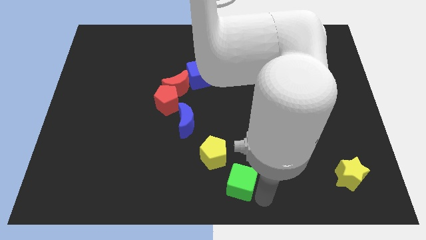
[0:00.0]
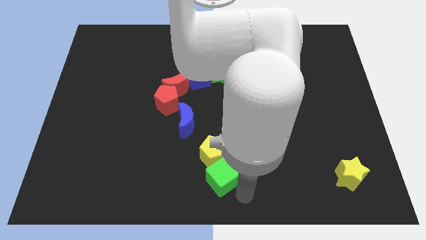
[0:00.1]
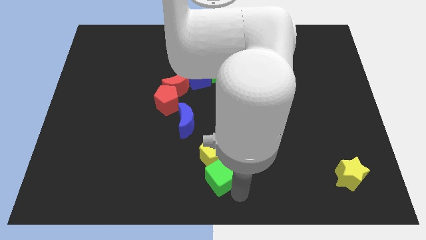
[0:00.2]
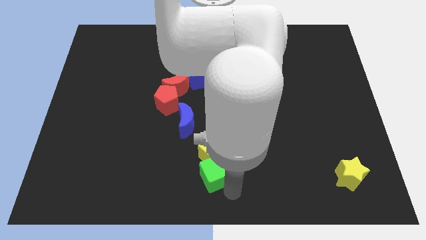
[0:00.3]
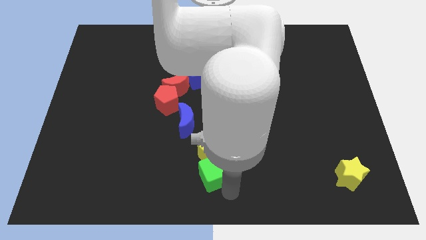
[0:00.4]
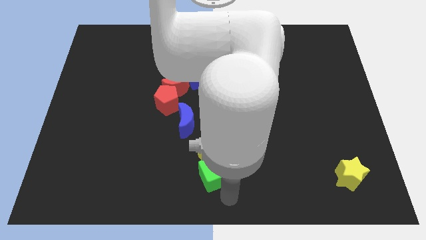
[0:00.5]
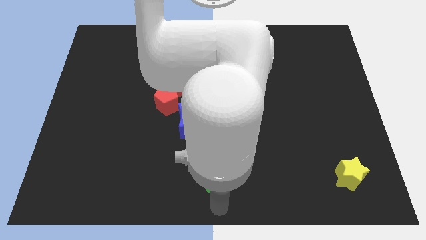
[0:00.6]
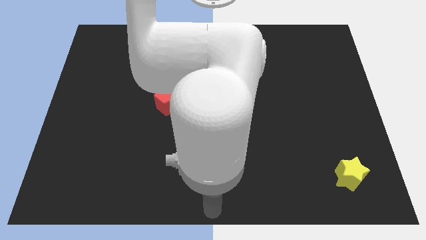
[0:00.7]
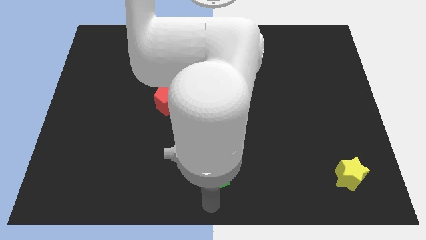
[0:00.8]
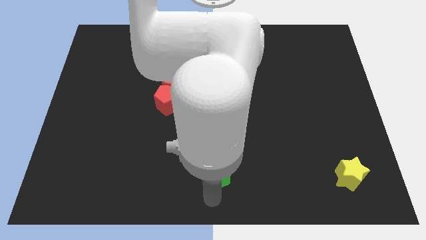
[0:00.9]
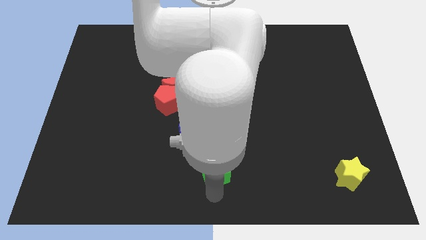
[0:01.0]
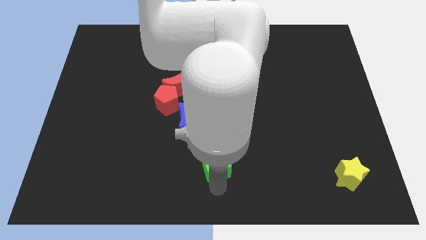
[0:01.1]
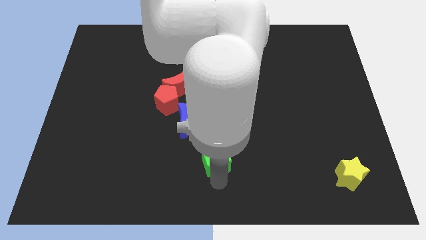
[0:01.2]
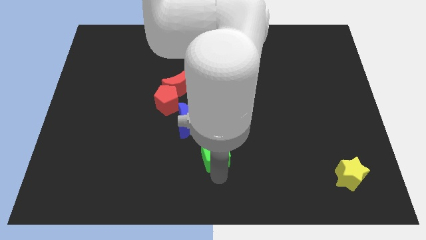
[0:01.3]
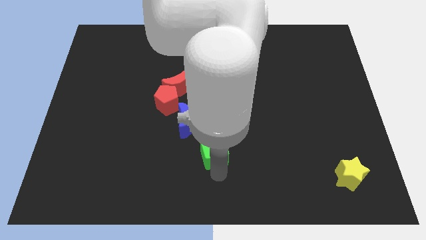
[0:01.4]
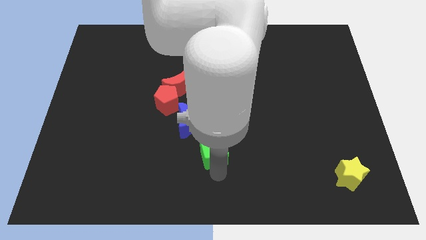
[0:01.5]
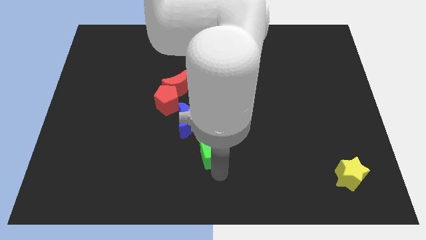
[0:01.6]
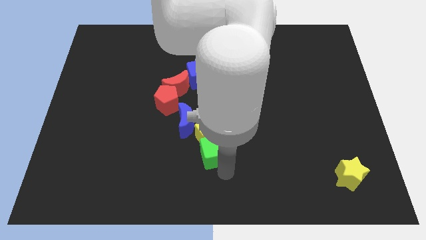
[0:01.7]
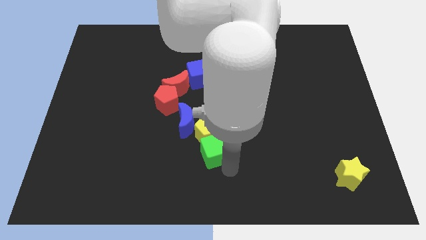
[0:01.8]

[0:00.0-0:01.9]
push the green cube and yellow pentagon into the blue crescent

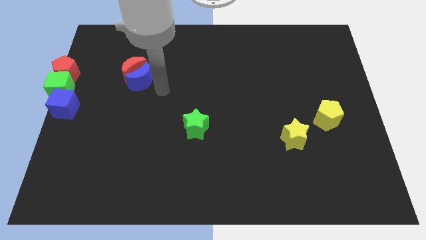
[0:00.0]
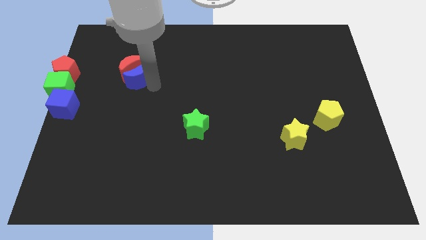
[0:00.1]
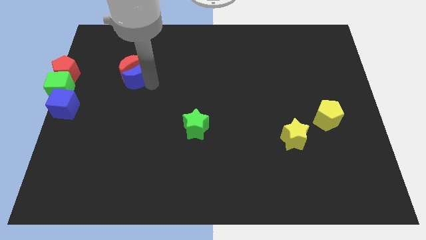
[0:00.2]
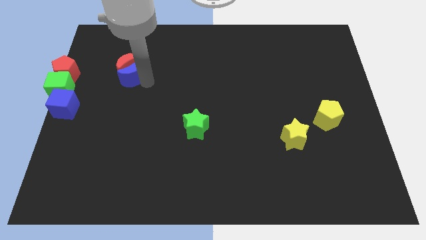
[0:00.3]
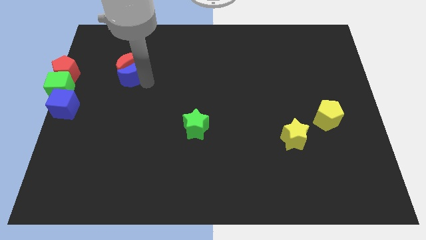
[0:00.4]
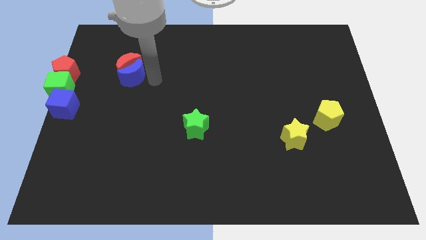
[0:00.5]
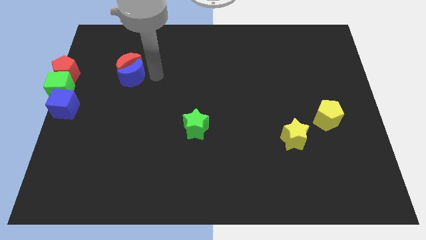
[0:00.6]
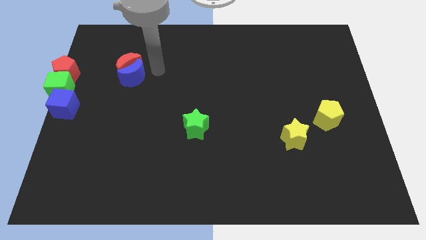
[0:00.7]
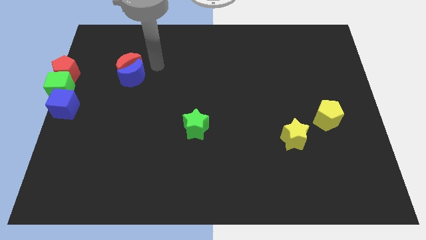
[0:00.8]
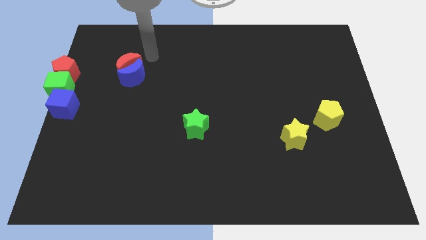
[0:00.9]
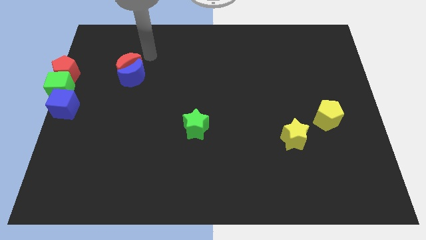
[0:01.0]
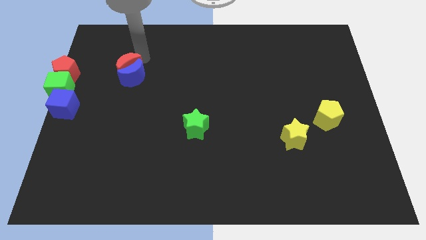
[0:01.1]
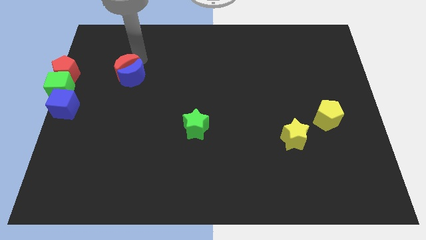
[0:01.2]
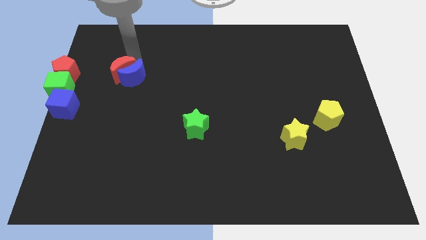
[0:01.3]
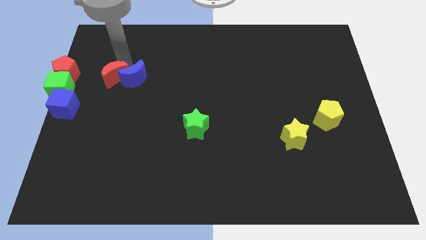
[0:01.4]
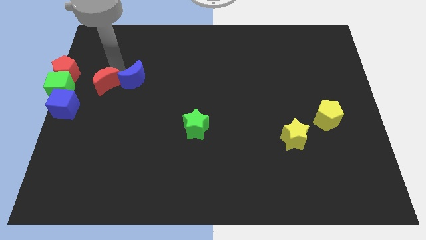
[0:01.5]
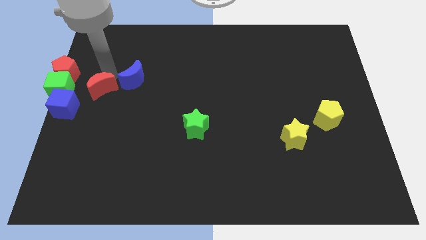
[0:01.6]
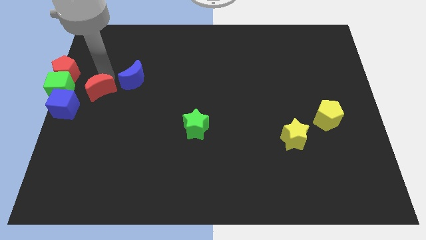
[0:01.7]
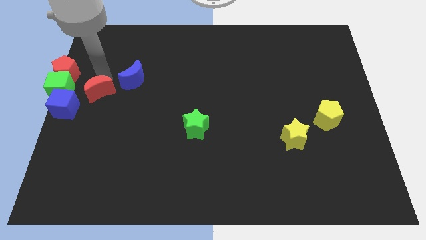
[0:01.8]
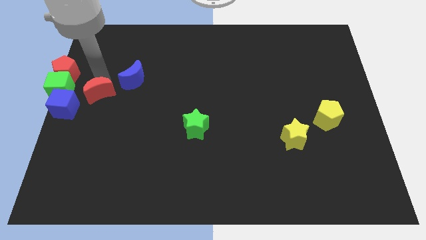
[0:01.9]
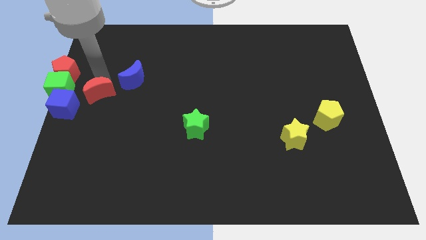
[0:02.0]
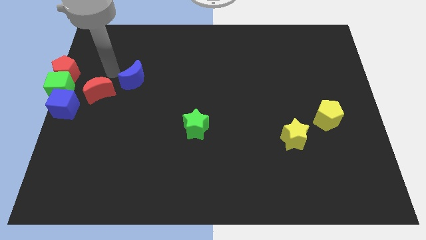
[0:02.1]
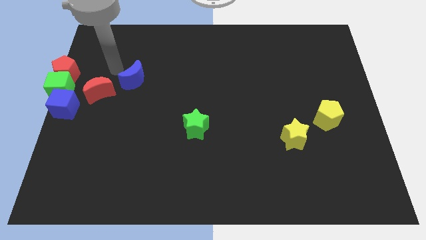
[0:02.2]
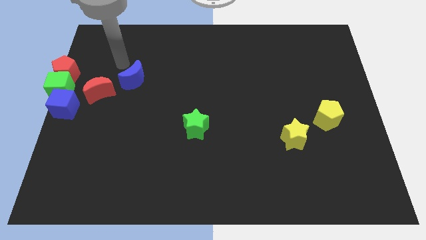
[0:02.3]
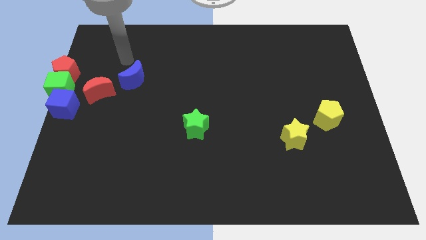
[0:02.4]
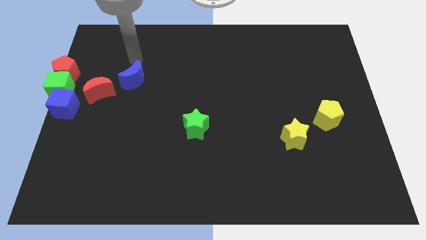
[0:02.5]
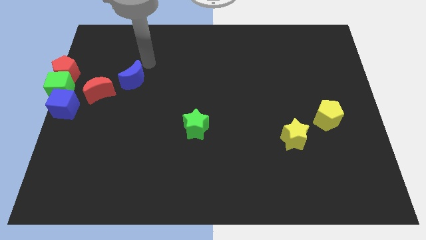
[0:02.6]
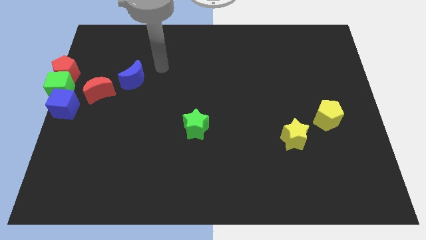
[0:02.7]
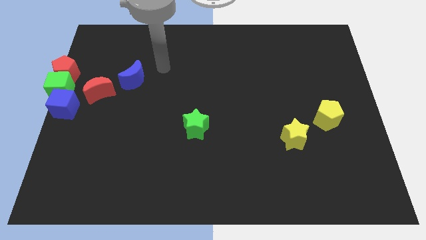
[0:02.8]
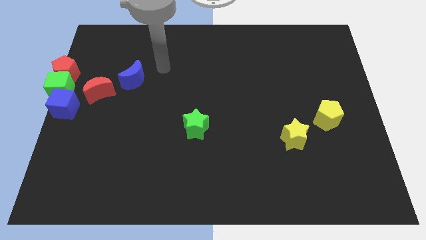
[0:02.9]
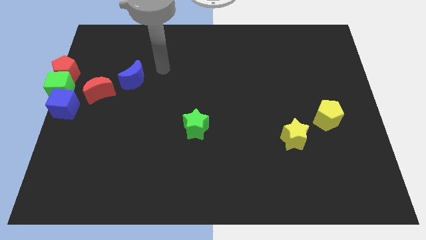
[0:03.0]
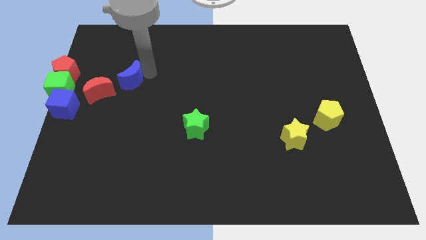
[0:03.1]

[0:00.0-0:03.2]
move the red crescent to the left center of the board

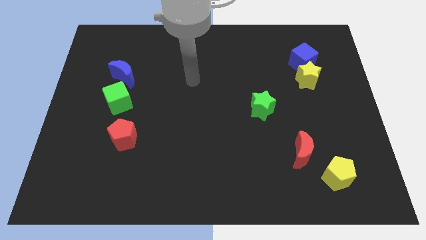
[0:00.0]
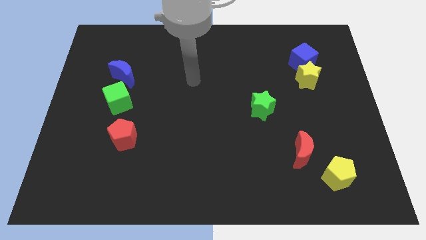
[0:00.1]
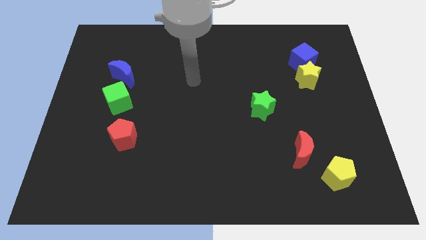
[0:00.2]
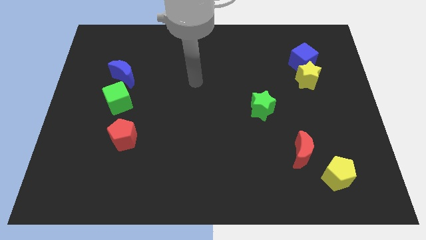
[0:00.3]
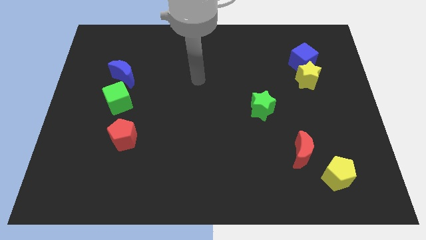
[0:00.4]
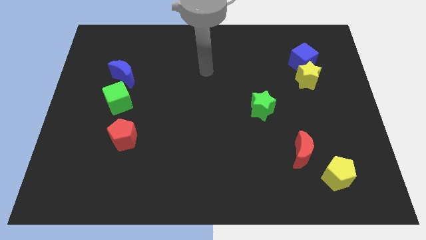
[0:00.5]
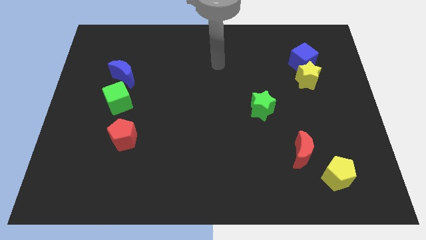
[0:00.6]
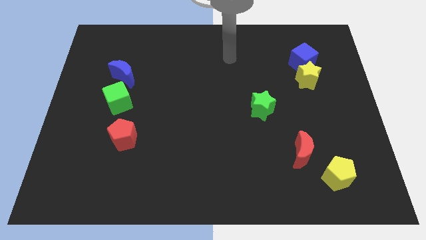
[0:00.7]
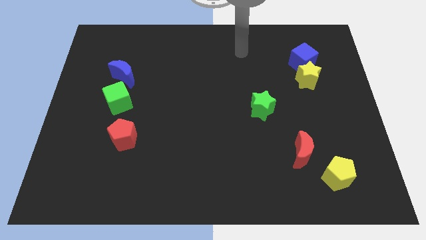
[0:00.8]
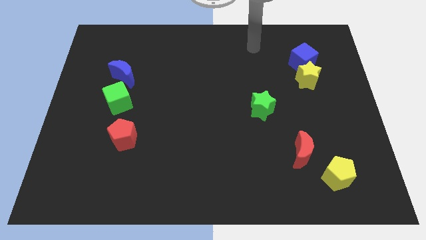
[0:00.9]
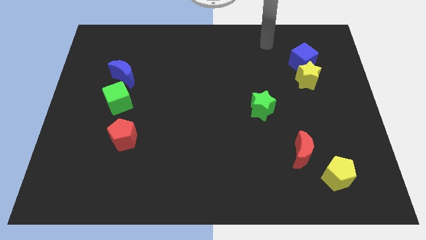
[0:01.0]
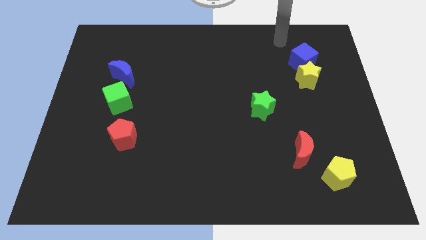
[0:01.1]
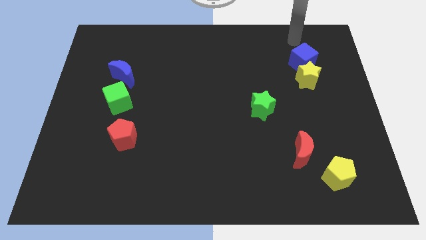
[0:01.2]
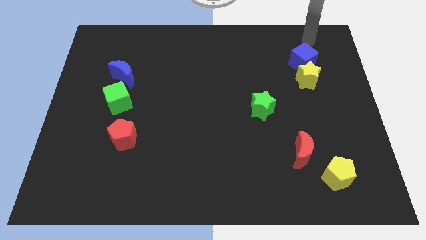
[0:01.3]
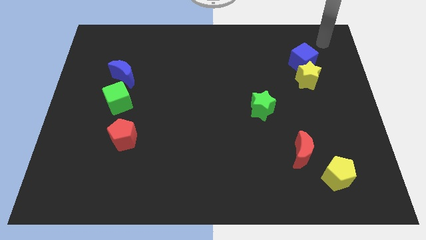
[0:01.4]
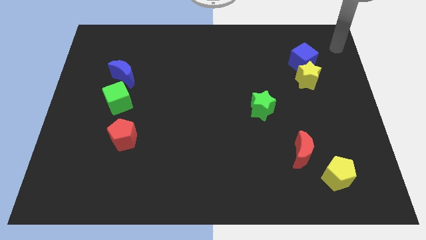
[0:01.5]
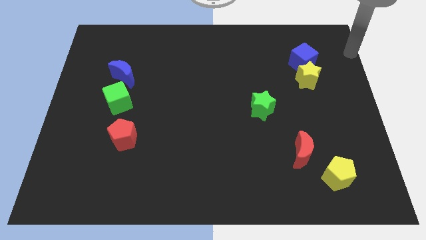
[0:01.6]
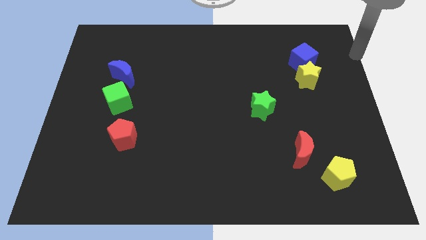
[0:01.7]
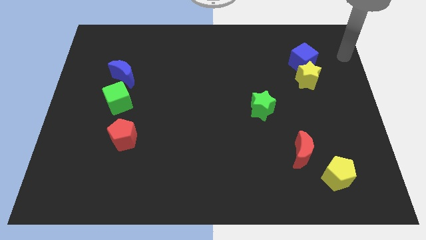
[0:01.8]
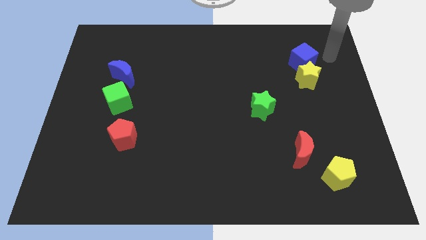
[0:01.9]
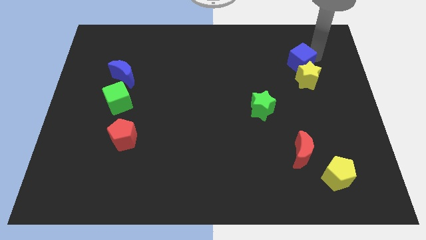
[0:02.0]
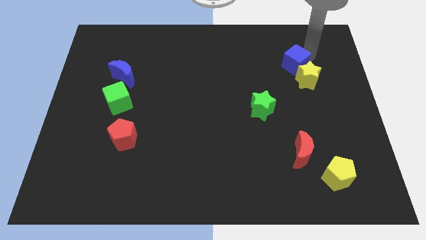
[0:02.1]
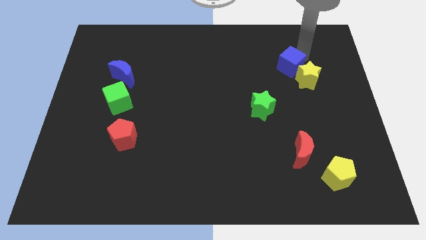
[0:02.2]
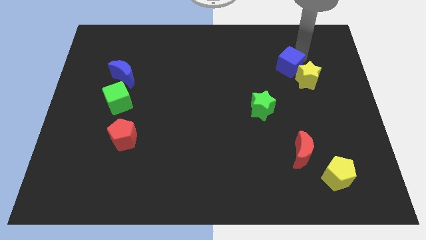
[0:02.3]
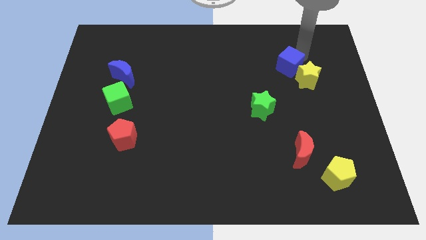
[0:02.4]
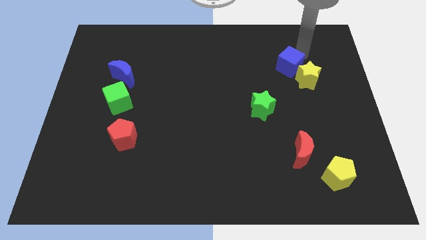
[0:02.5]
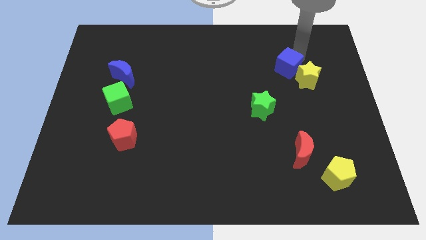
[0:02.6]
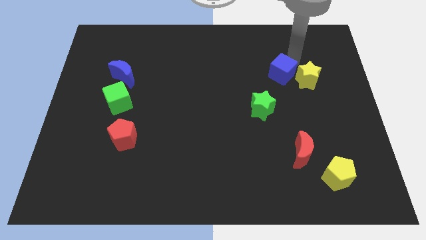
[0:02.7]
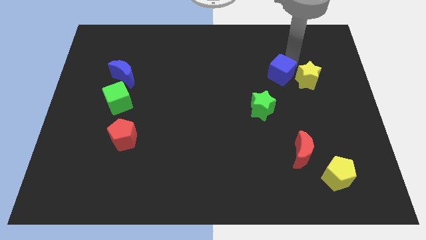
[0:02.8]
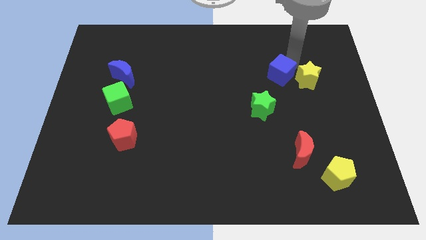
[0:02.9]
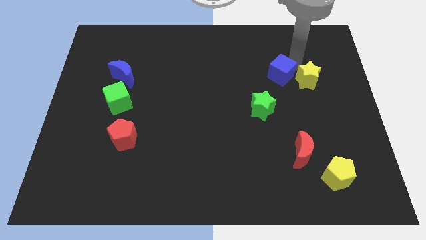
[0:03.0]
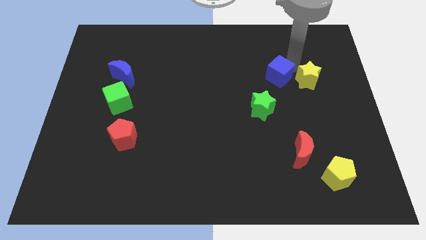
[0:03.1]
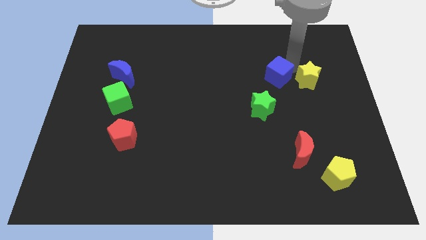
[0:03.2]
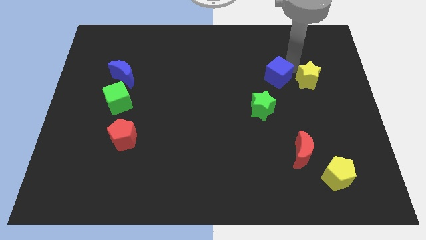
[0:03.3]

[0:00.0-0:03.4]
place blue cube to the left of yellow star

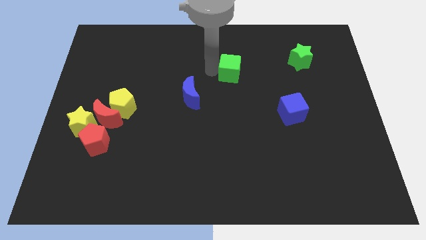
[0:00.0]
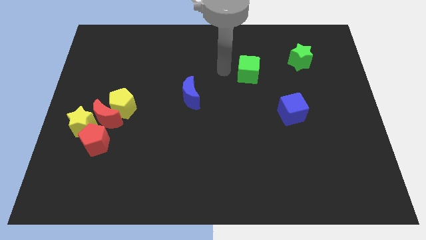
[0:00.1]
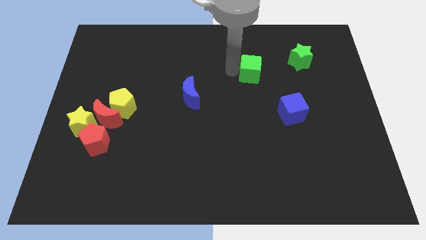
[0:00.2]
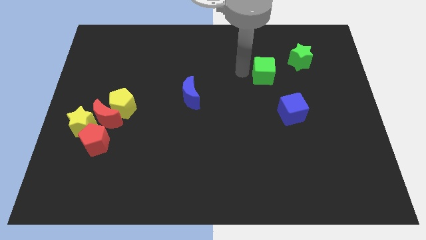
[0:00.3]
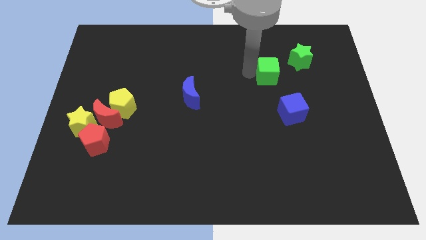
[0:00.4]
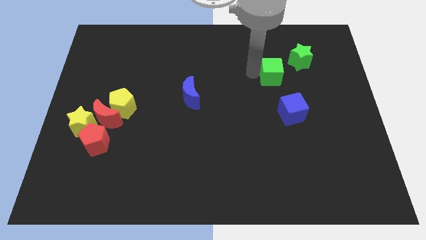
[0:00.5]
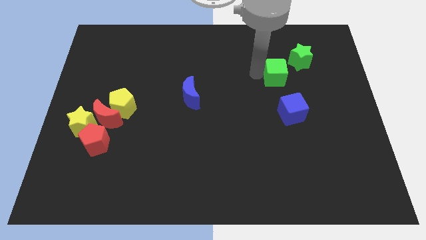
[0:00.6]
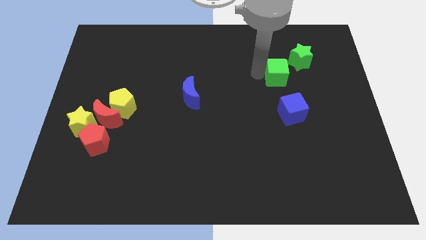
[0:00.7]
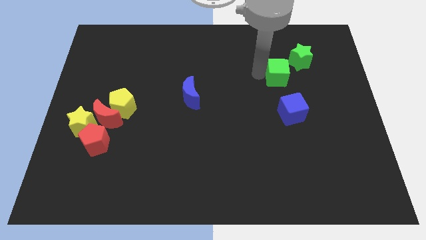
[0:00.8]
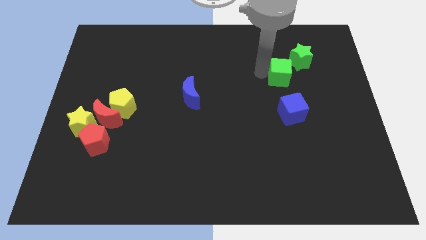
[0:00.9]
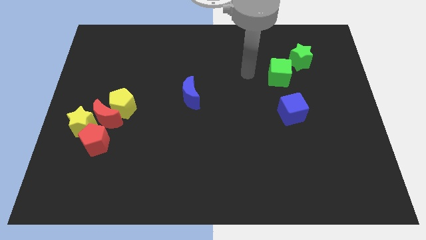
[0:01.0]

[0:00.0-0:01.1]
slide the green cube to the bottom left side of the green star
